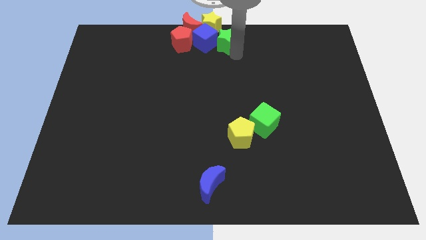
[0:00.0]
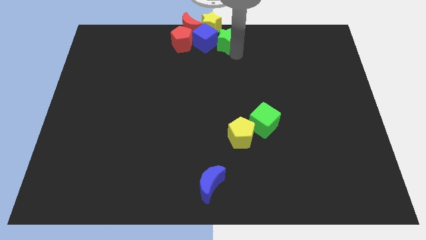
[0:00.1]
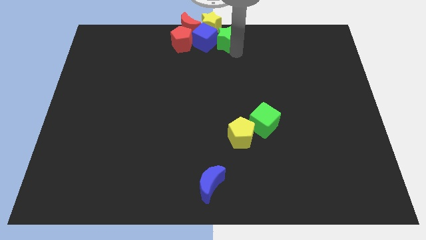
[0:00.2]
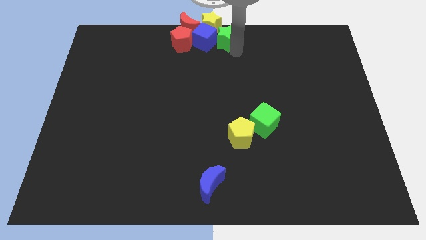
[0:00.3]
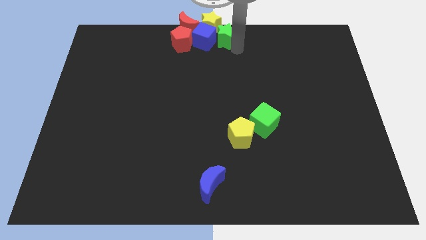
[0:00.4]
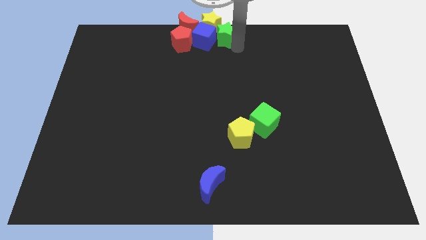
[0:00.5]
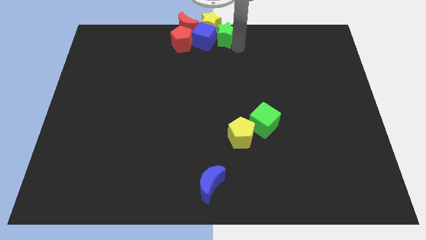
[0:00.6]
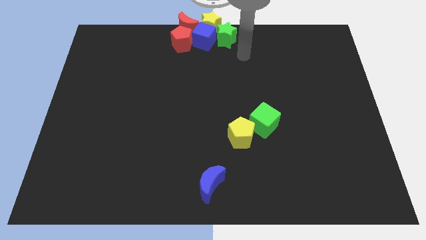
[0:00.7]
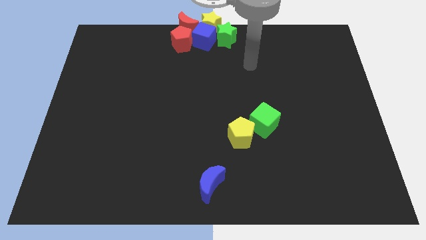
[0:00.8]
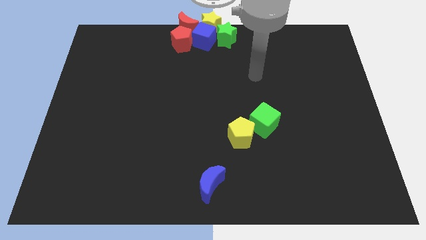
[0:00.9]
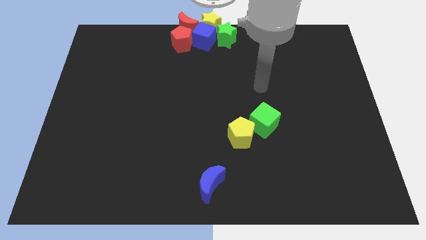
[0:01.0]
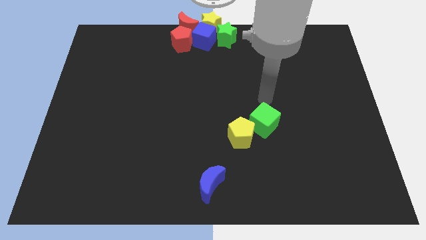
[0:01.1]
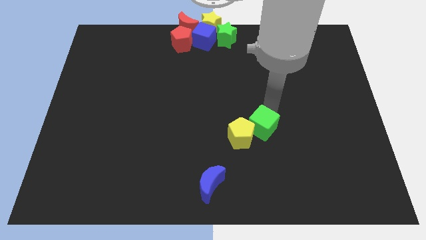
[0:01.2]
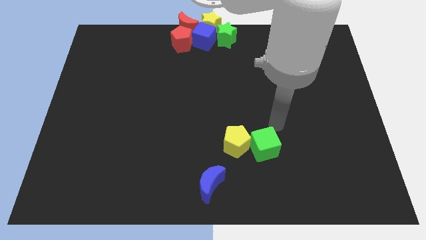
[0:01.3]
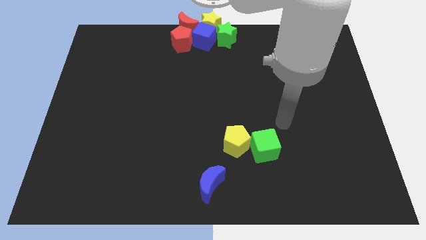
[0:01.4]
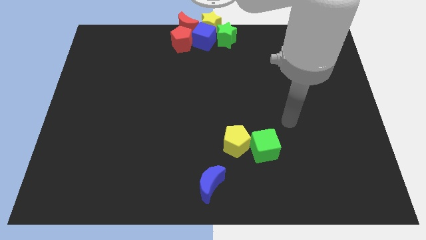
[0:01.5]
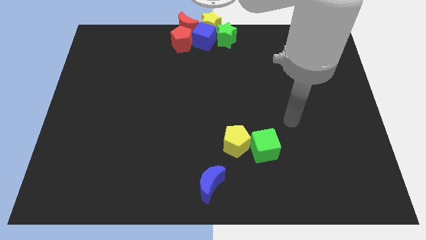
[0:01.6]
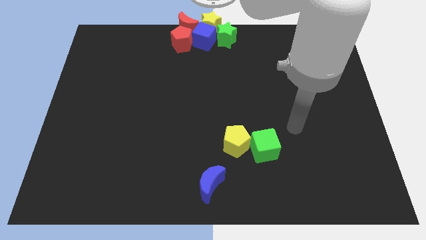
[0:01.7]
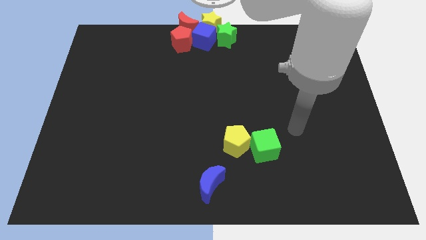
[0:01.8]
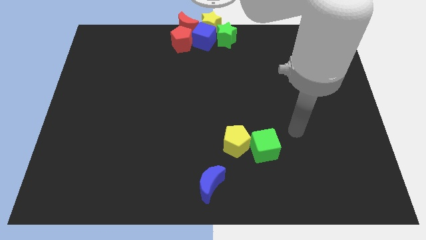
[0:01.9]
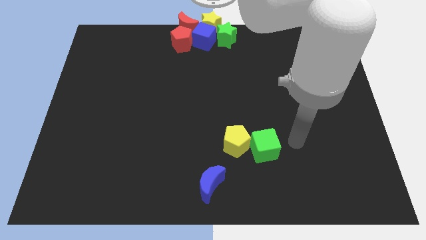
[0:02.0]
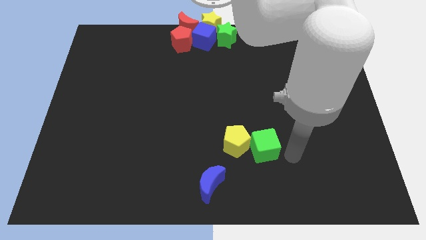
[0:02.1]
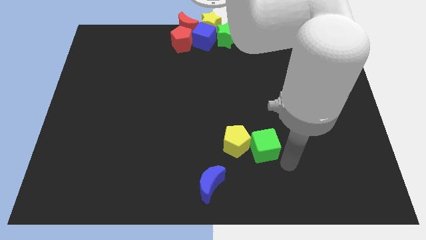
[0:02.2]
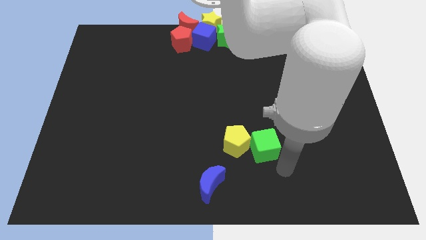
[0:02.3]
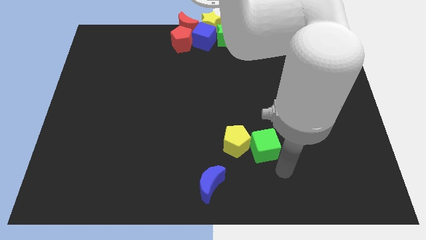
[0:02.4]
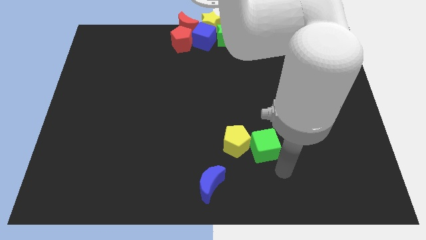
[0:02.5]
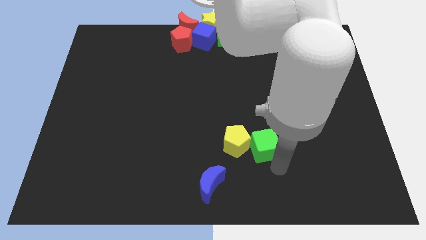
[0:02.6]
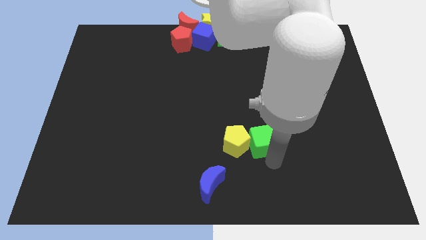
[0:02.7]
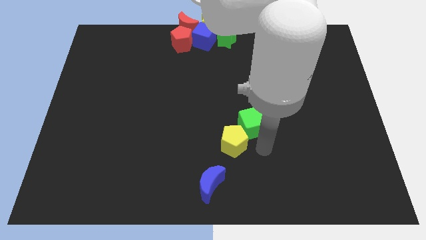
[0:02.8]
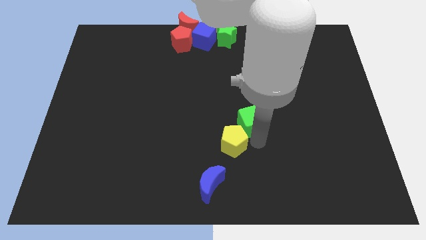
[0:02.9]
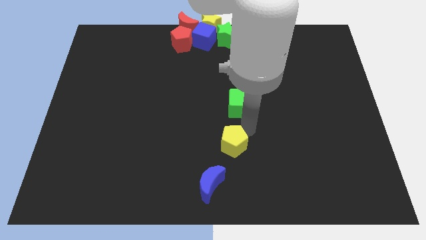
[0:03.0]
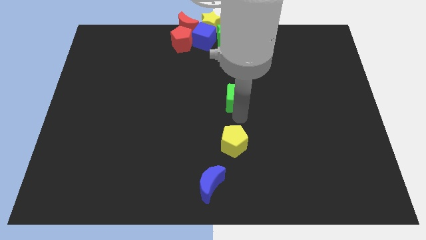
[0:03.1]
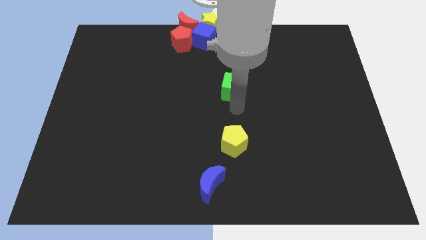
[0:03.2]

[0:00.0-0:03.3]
place the green cube above the yellow pentagon

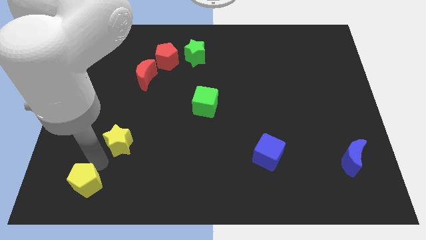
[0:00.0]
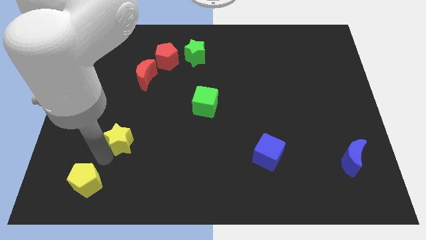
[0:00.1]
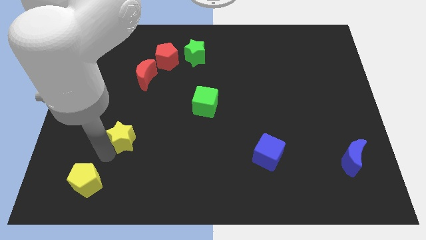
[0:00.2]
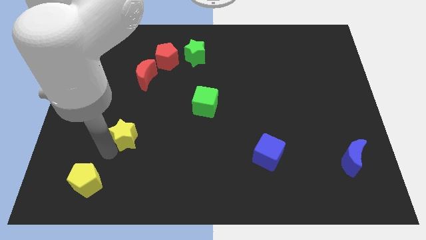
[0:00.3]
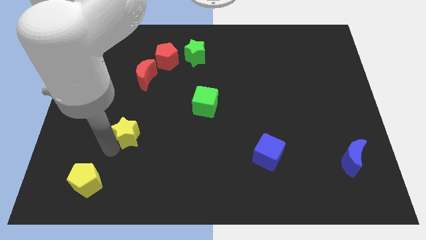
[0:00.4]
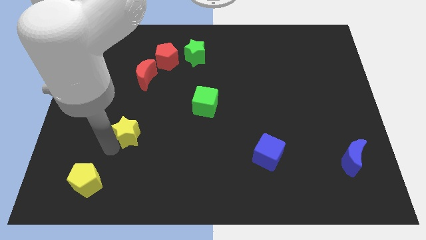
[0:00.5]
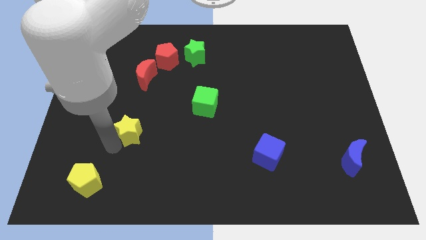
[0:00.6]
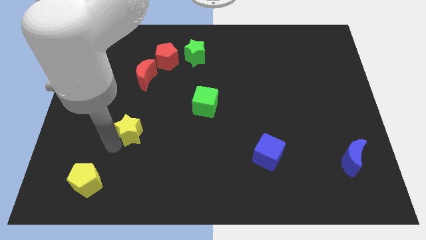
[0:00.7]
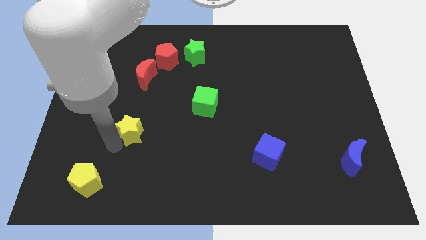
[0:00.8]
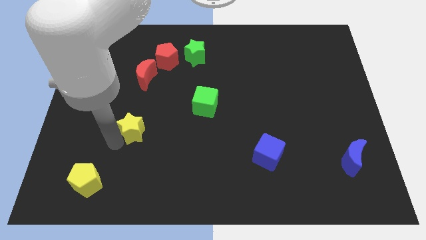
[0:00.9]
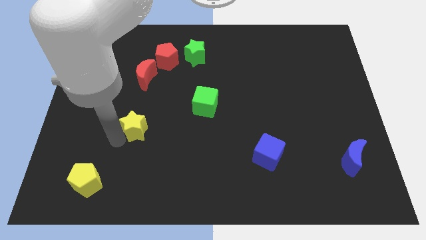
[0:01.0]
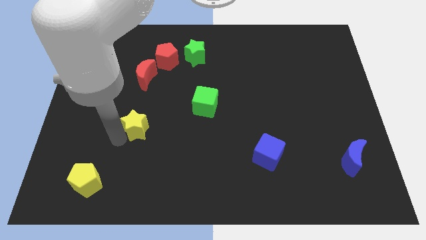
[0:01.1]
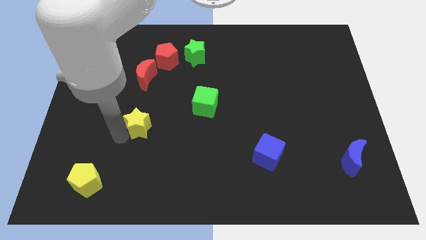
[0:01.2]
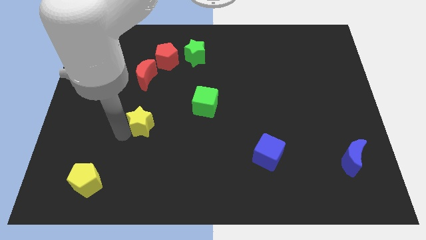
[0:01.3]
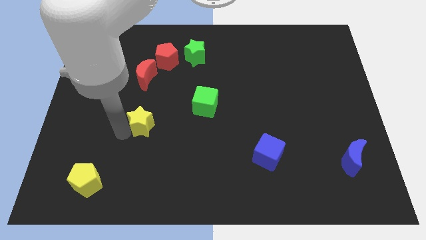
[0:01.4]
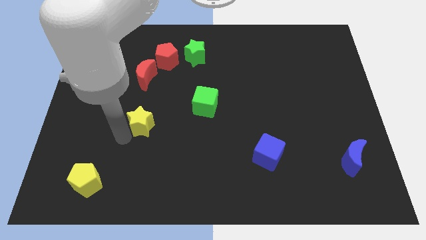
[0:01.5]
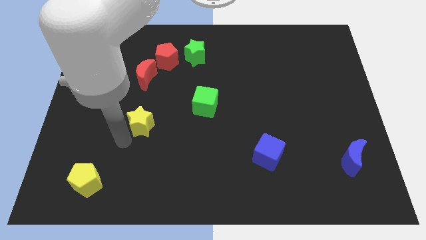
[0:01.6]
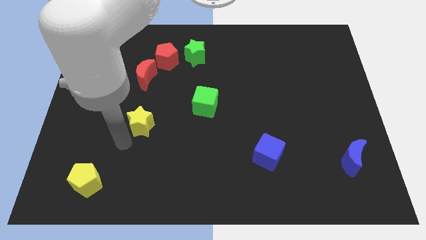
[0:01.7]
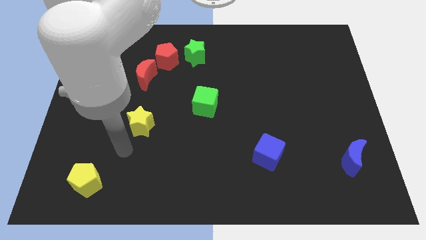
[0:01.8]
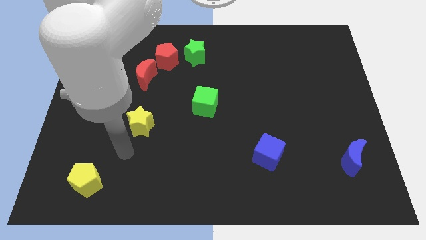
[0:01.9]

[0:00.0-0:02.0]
put the yellow star below the red crescent

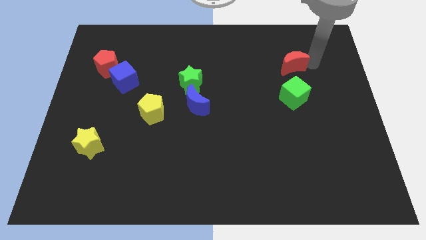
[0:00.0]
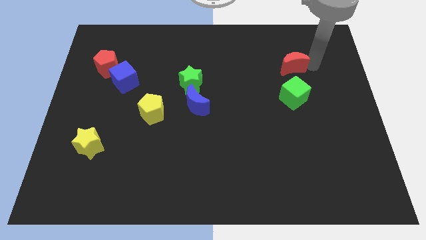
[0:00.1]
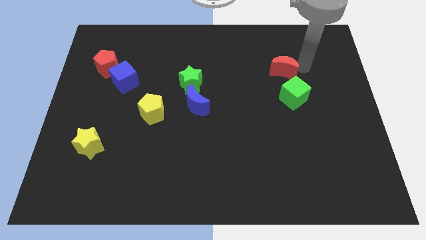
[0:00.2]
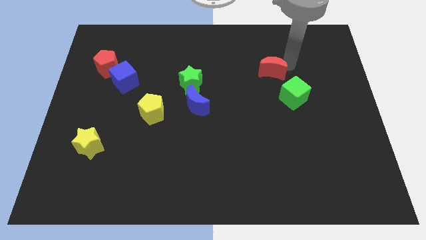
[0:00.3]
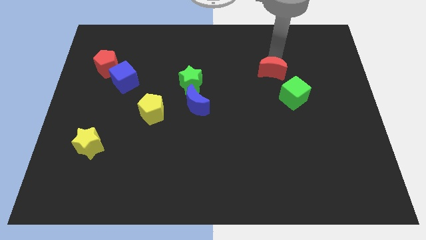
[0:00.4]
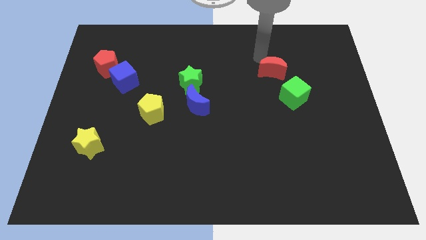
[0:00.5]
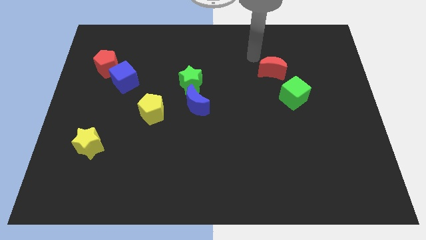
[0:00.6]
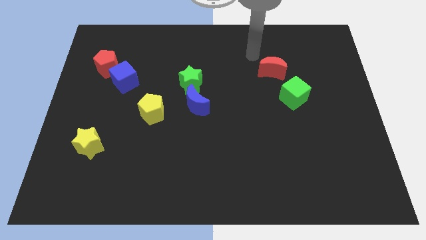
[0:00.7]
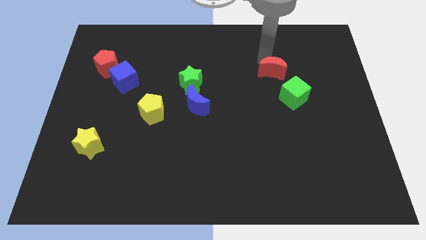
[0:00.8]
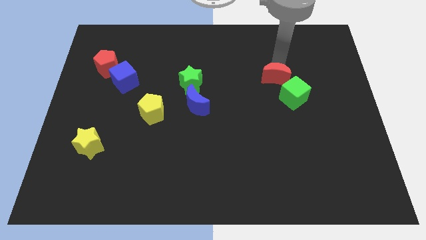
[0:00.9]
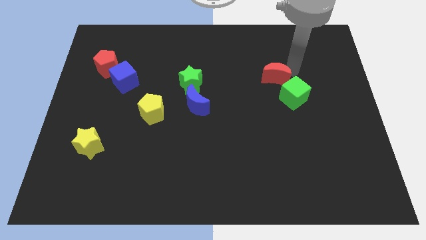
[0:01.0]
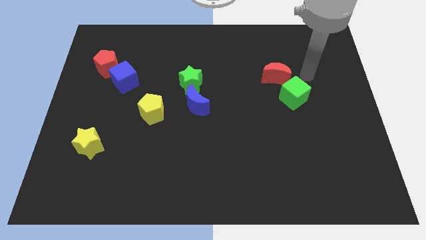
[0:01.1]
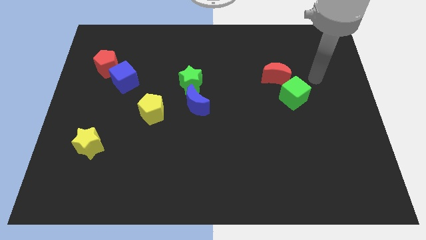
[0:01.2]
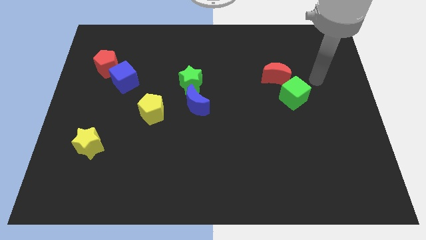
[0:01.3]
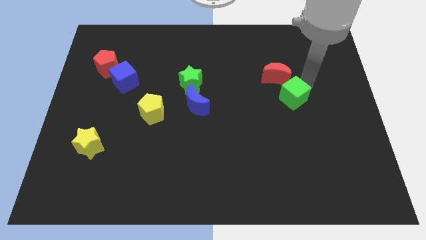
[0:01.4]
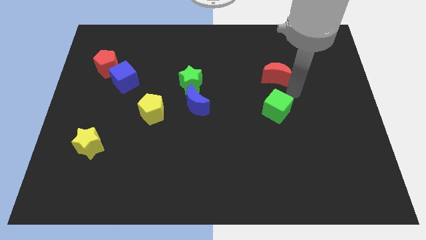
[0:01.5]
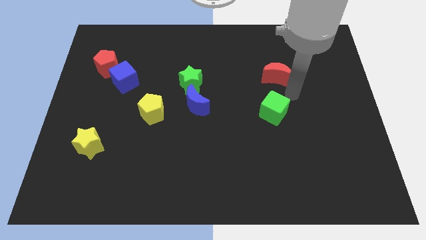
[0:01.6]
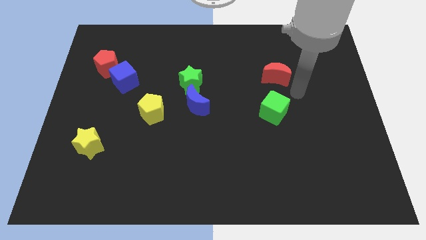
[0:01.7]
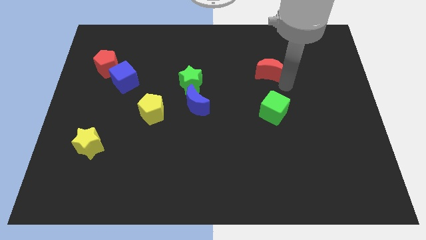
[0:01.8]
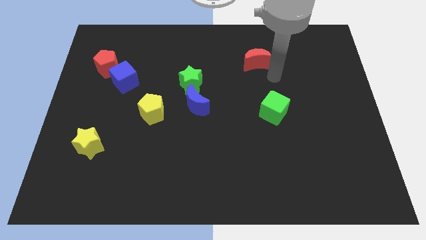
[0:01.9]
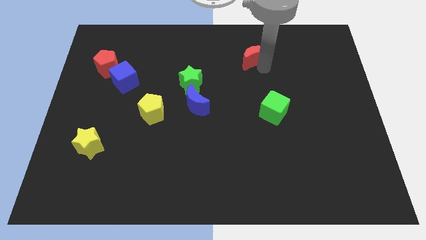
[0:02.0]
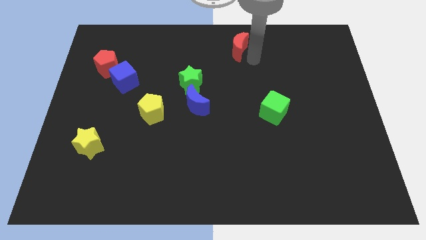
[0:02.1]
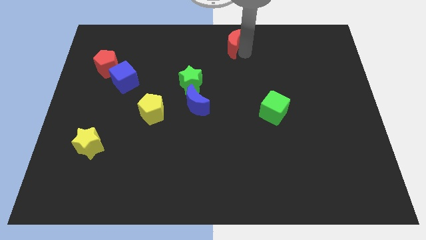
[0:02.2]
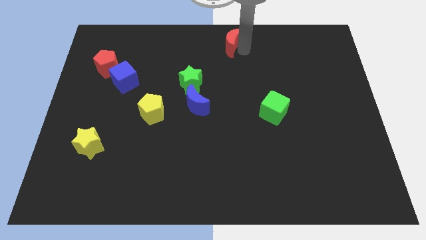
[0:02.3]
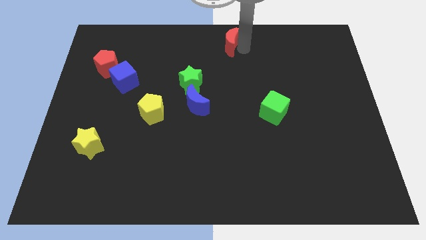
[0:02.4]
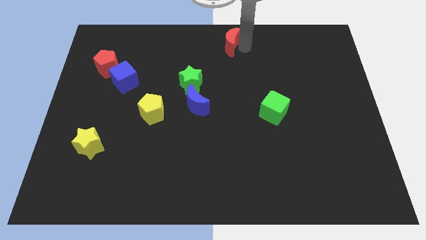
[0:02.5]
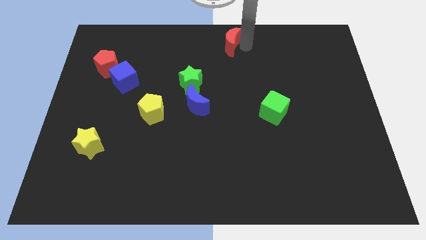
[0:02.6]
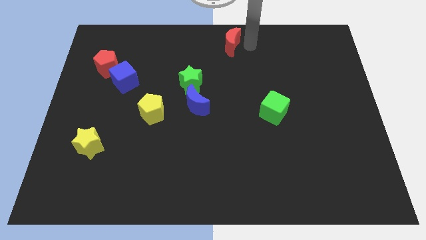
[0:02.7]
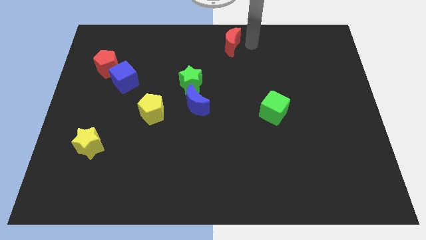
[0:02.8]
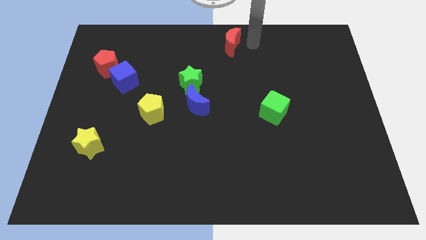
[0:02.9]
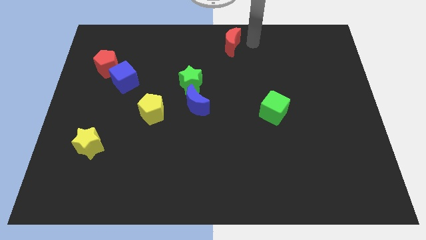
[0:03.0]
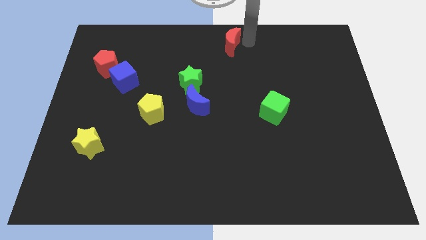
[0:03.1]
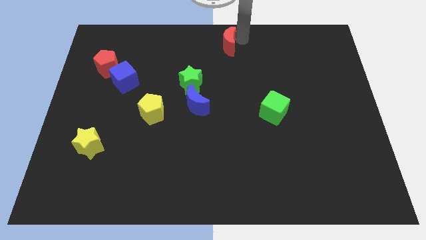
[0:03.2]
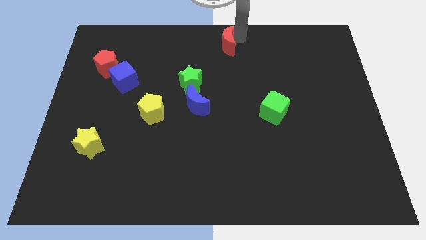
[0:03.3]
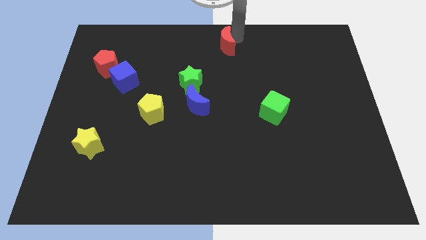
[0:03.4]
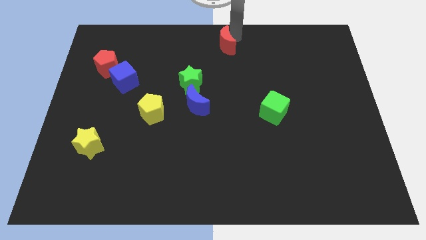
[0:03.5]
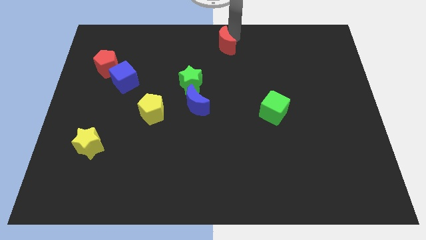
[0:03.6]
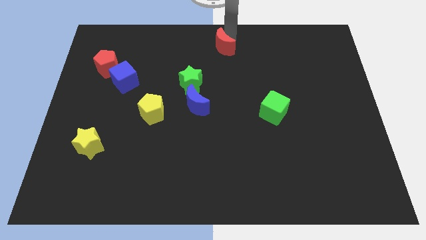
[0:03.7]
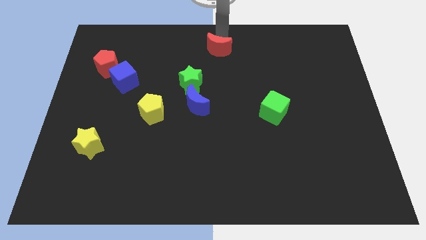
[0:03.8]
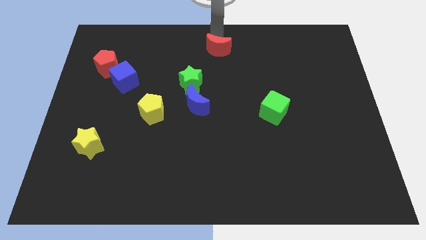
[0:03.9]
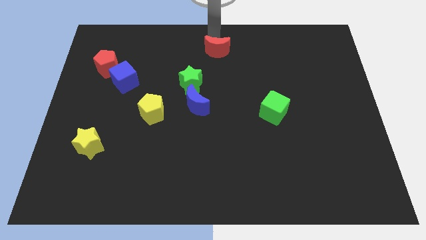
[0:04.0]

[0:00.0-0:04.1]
separate the red crescent from green cube
